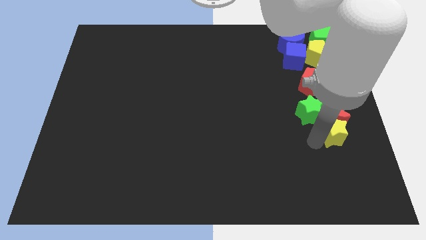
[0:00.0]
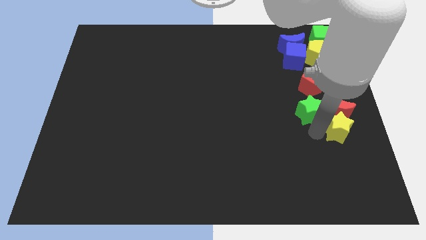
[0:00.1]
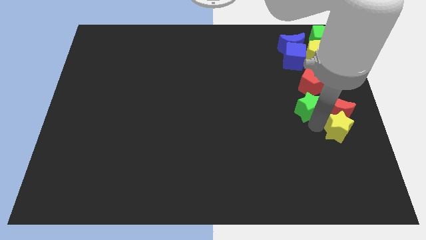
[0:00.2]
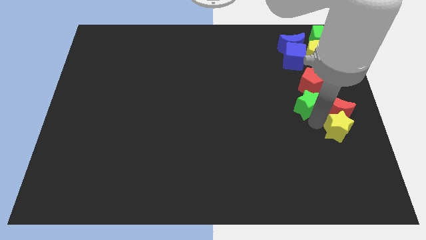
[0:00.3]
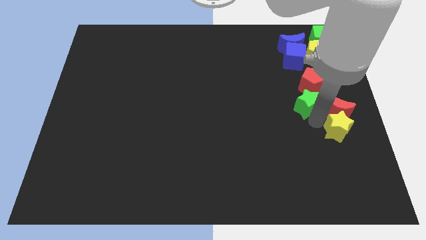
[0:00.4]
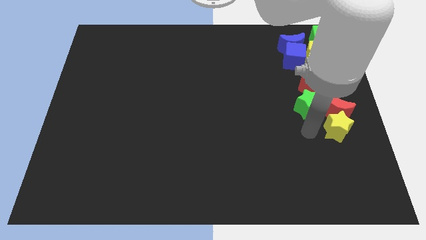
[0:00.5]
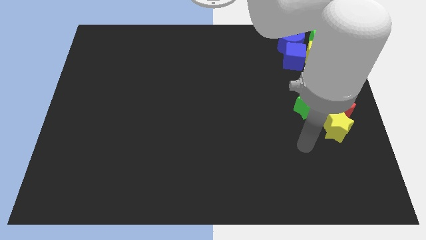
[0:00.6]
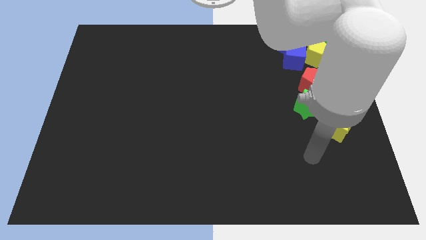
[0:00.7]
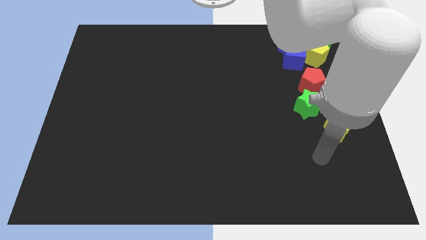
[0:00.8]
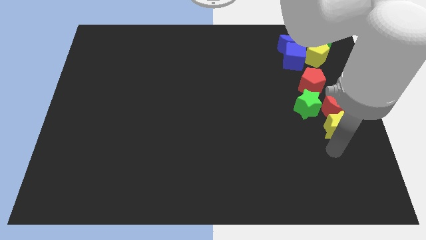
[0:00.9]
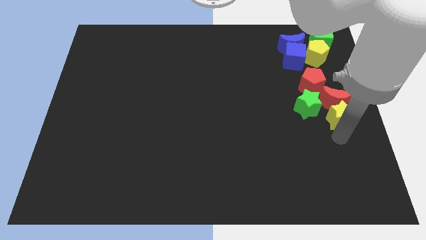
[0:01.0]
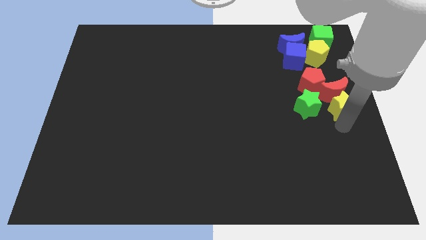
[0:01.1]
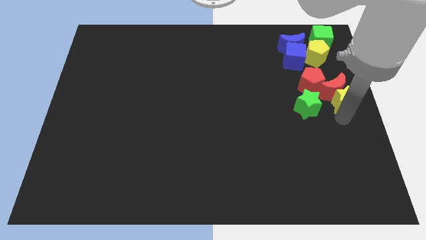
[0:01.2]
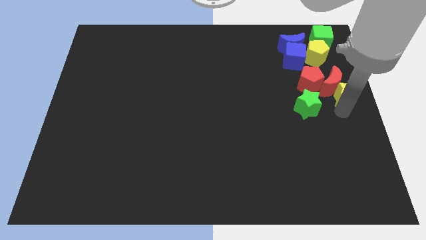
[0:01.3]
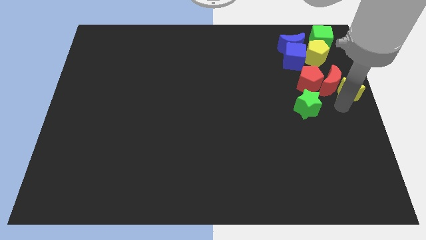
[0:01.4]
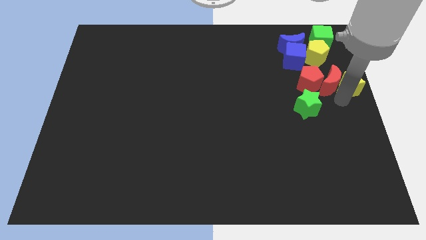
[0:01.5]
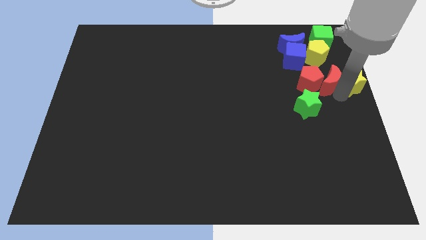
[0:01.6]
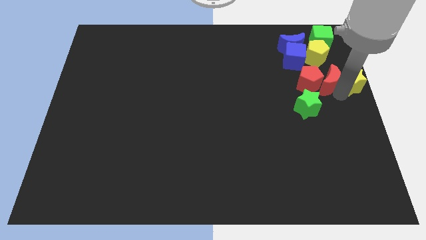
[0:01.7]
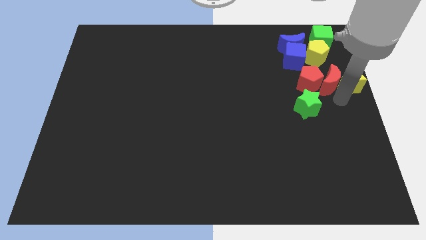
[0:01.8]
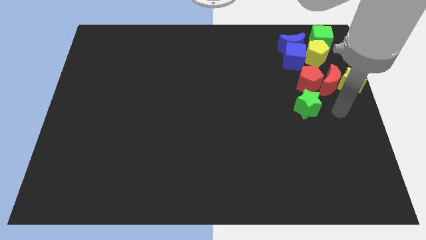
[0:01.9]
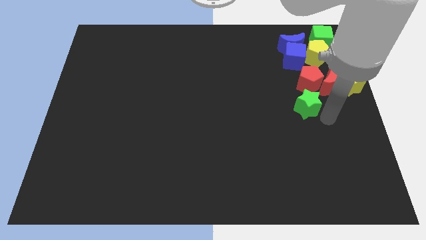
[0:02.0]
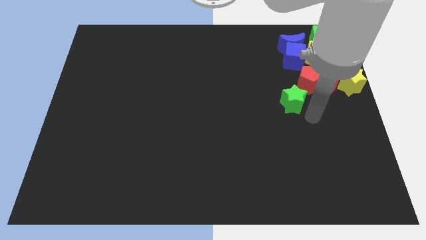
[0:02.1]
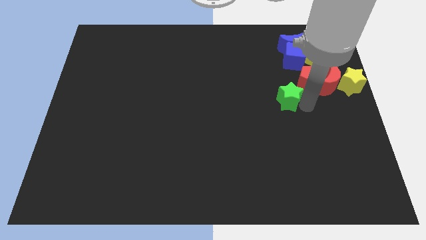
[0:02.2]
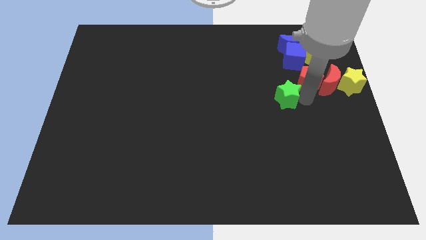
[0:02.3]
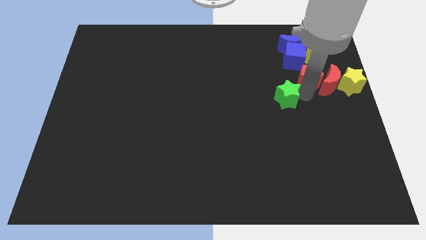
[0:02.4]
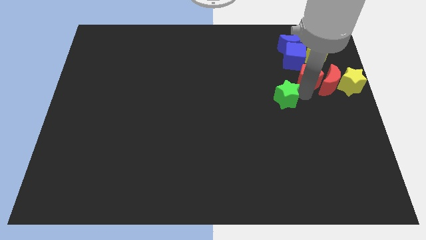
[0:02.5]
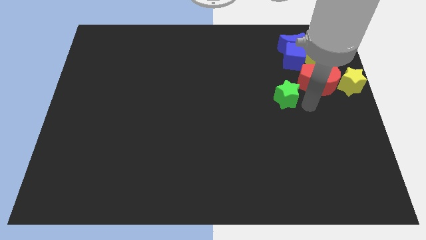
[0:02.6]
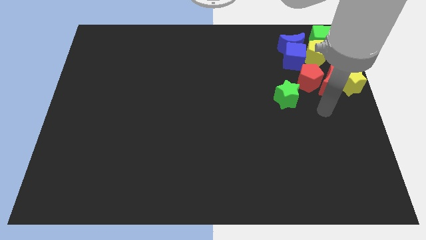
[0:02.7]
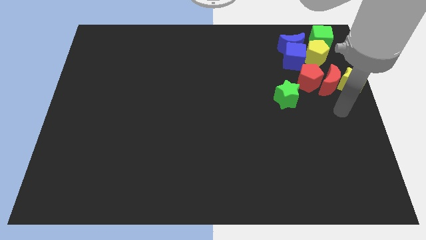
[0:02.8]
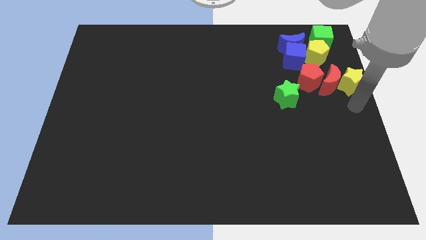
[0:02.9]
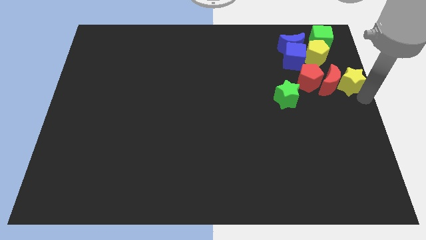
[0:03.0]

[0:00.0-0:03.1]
separate yellow and green stars

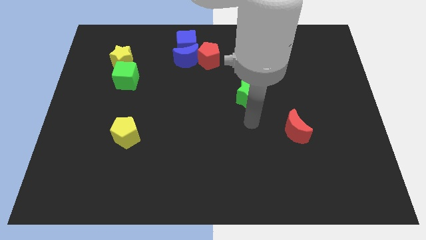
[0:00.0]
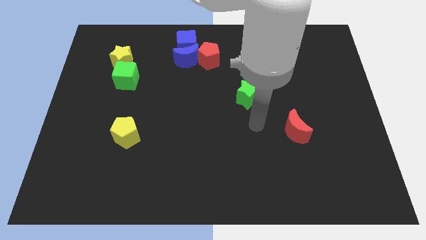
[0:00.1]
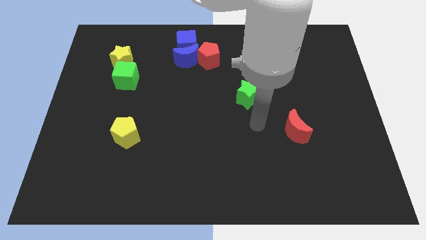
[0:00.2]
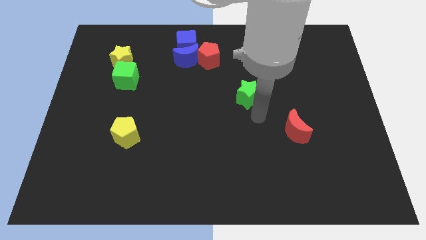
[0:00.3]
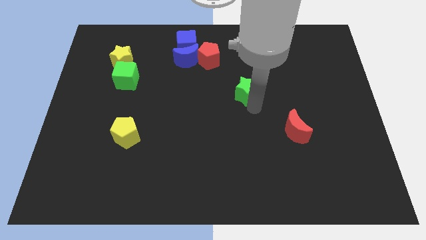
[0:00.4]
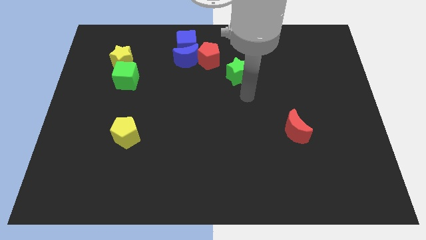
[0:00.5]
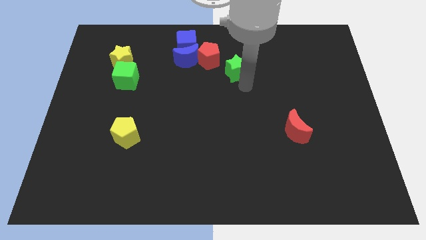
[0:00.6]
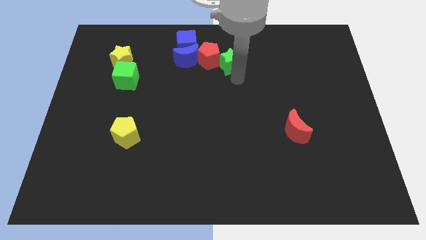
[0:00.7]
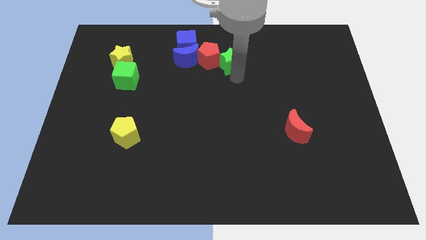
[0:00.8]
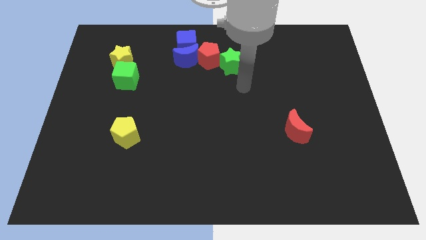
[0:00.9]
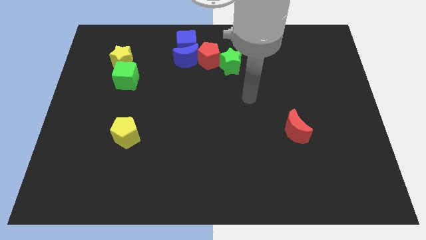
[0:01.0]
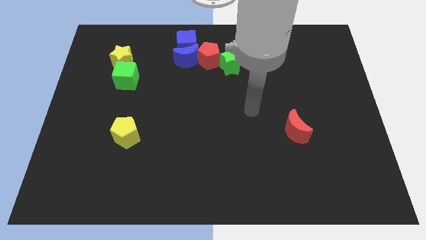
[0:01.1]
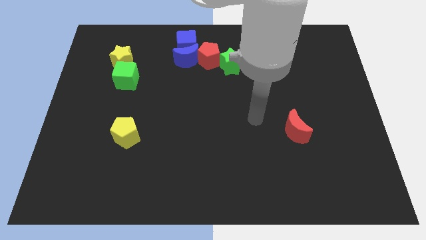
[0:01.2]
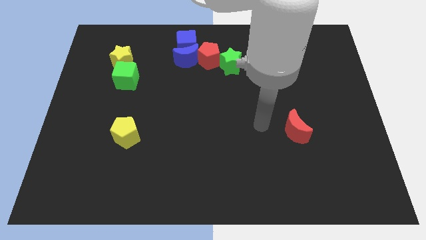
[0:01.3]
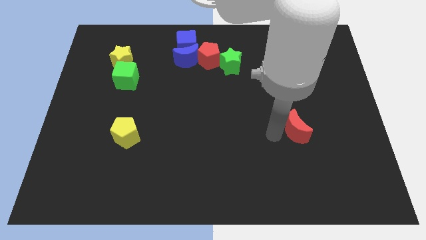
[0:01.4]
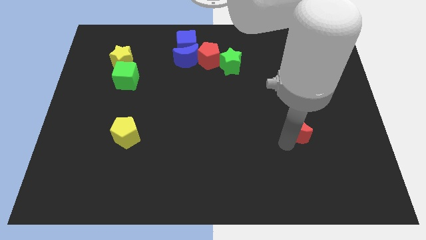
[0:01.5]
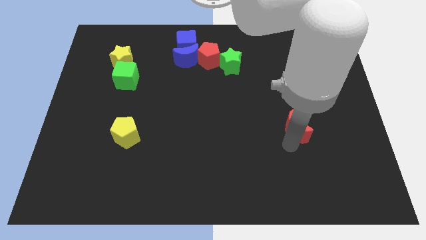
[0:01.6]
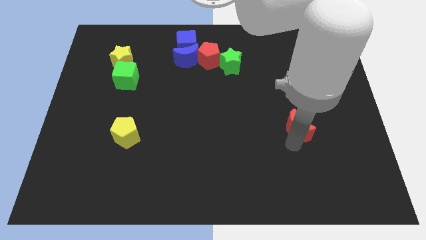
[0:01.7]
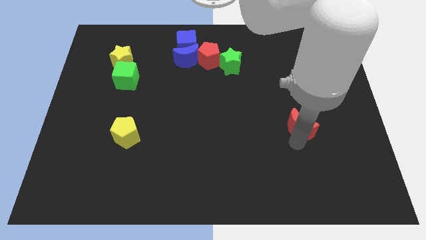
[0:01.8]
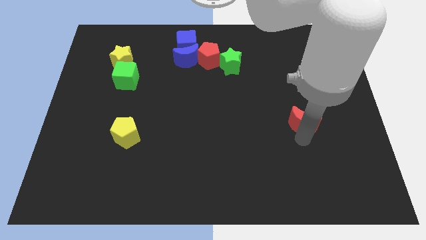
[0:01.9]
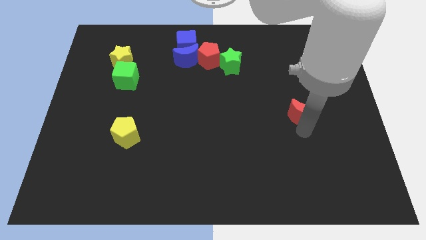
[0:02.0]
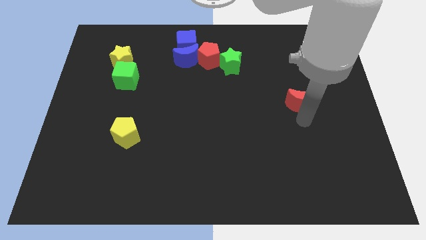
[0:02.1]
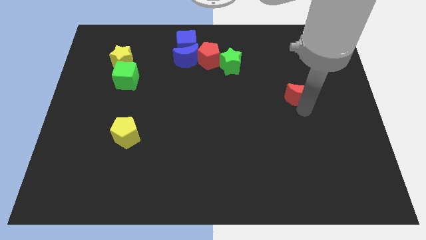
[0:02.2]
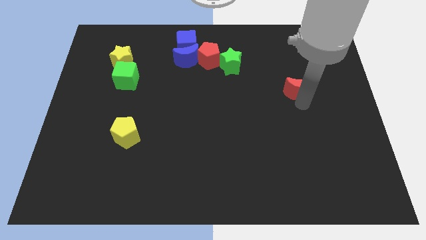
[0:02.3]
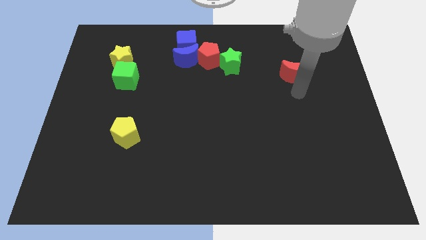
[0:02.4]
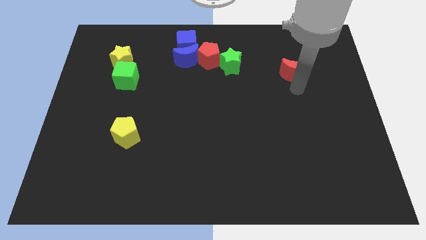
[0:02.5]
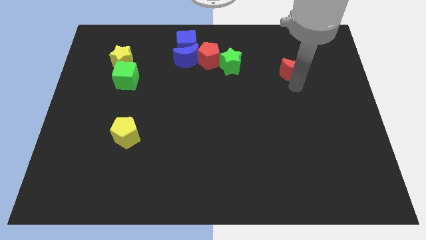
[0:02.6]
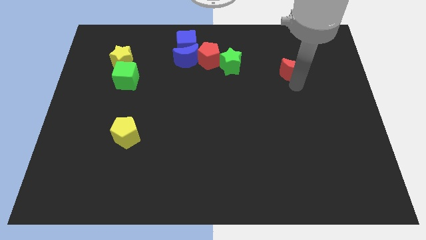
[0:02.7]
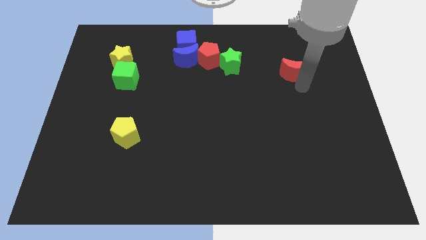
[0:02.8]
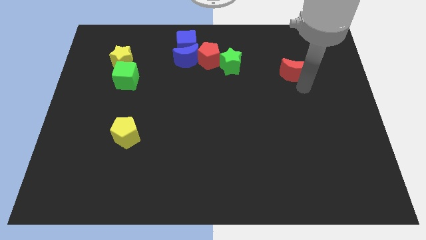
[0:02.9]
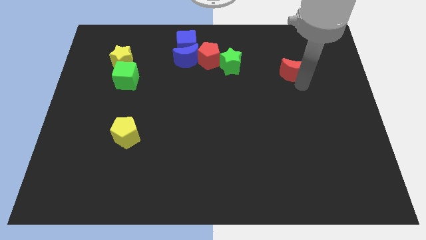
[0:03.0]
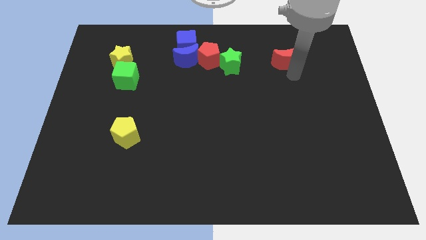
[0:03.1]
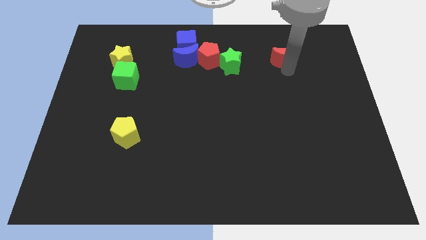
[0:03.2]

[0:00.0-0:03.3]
place green star and red moon parallel to each other

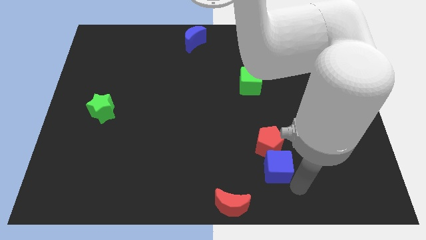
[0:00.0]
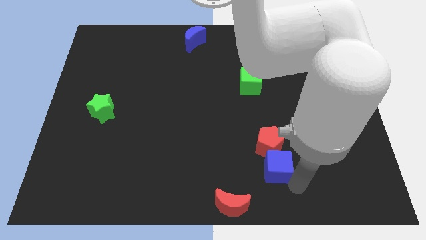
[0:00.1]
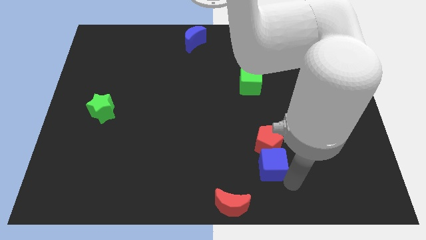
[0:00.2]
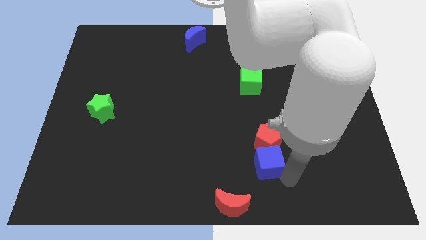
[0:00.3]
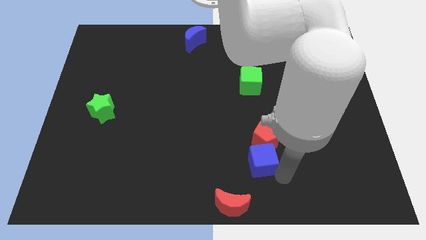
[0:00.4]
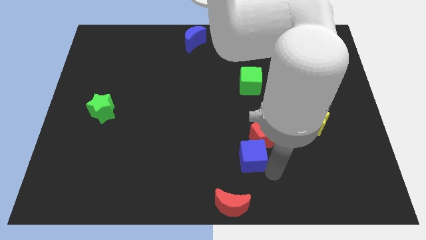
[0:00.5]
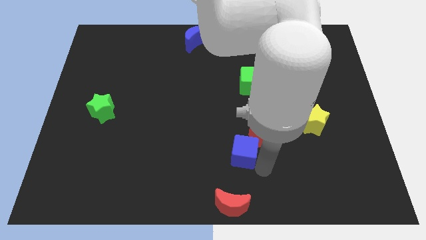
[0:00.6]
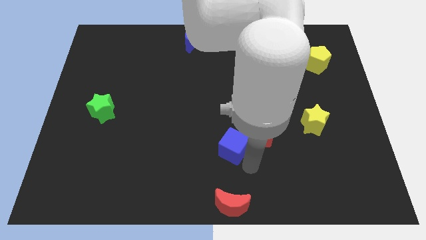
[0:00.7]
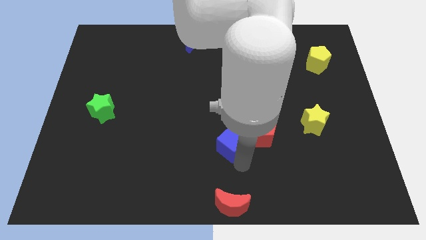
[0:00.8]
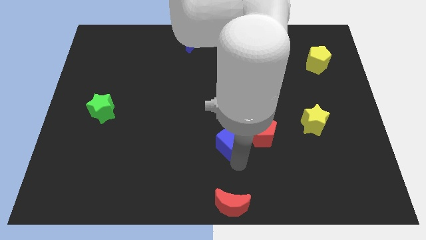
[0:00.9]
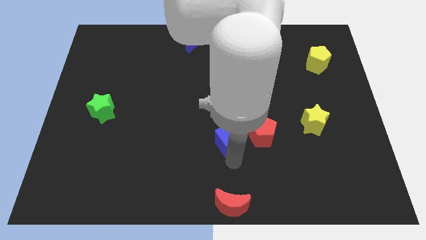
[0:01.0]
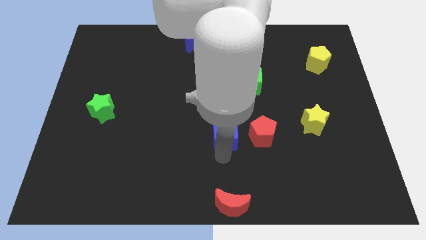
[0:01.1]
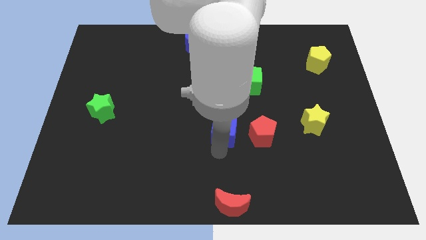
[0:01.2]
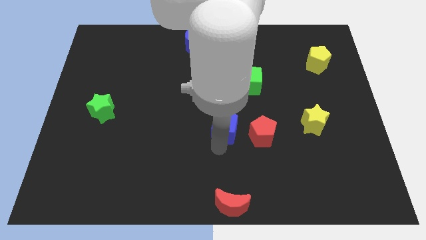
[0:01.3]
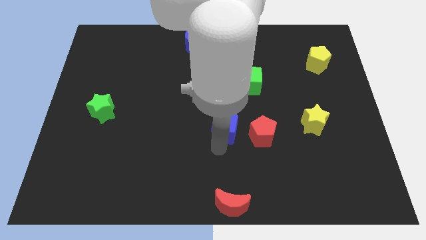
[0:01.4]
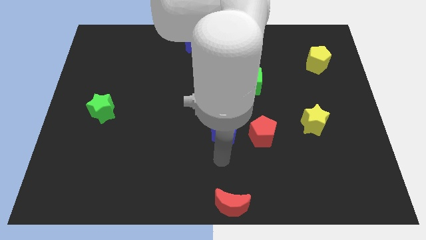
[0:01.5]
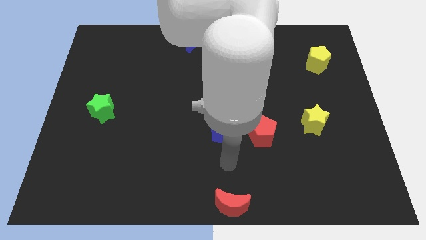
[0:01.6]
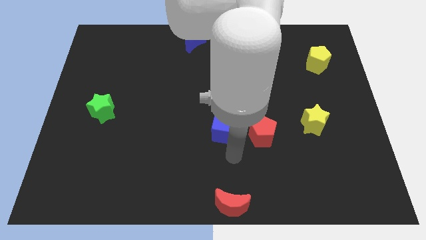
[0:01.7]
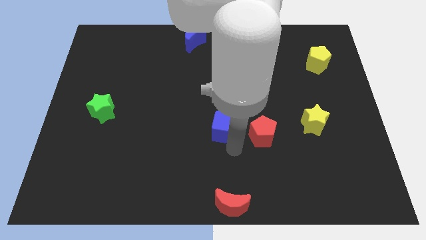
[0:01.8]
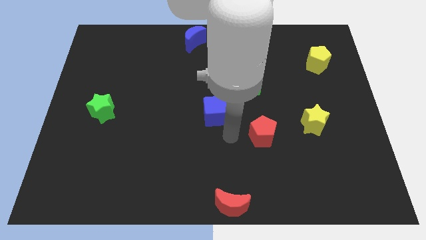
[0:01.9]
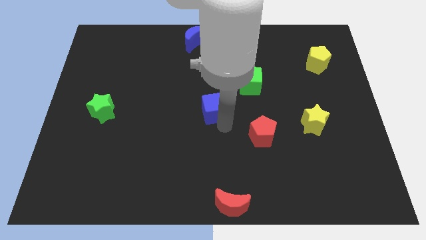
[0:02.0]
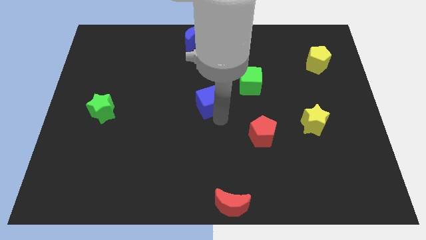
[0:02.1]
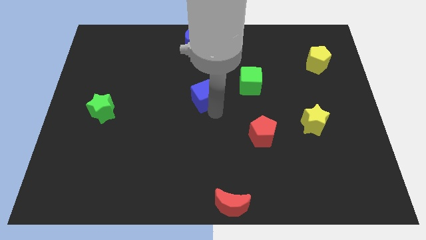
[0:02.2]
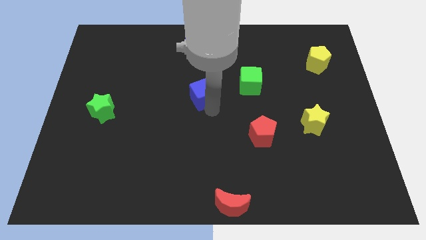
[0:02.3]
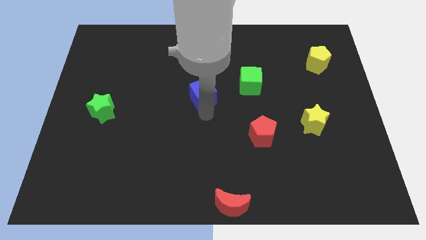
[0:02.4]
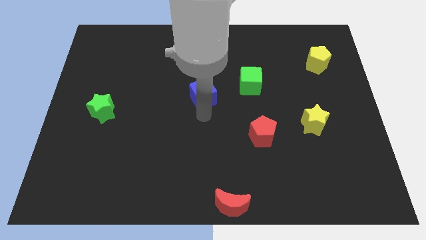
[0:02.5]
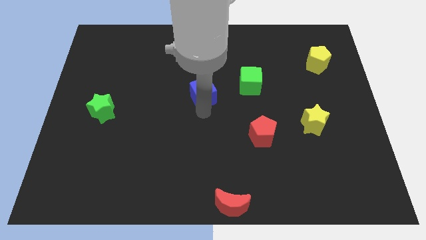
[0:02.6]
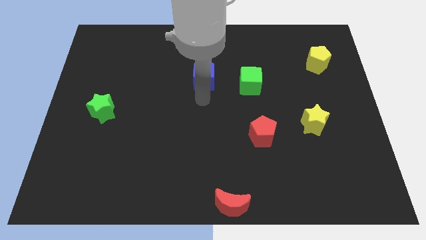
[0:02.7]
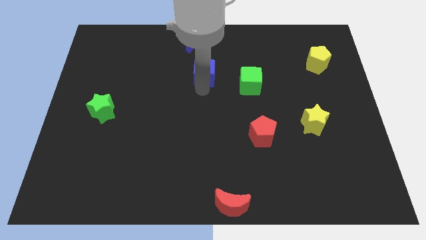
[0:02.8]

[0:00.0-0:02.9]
push blue cube towards upwards
